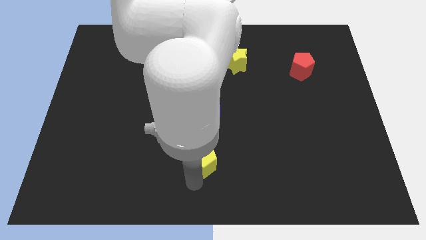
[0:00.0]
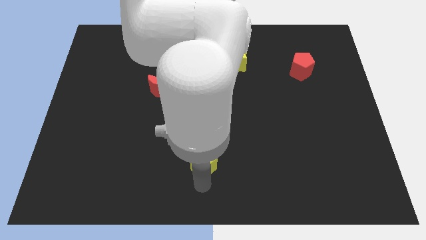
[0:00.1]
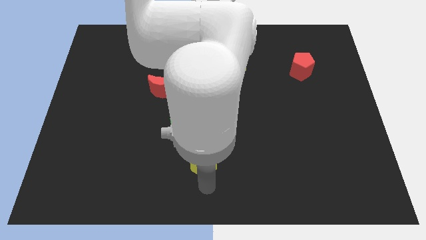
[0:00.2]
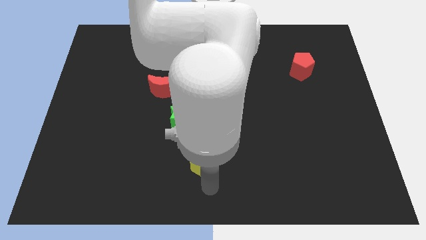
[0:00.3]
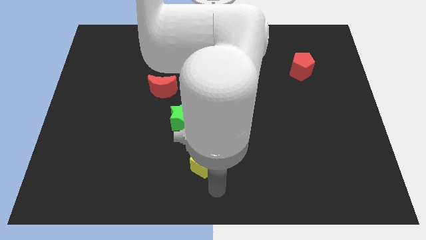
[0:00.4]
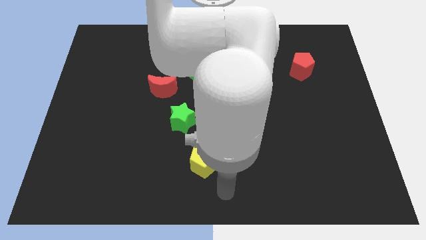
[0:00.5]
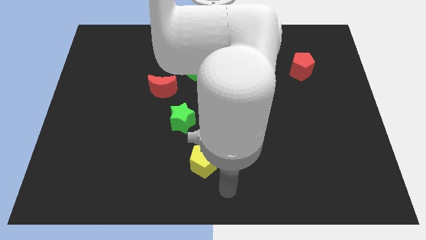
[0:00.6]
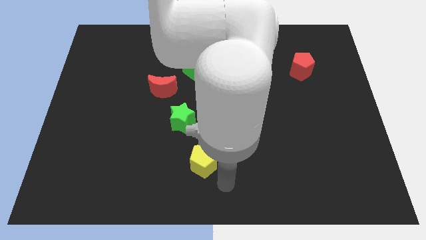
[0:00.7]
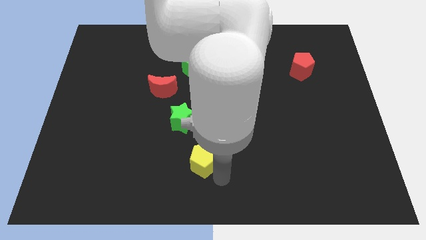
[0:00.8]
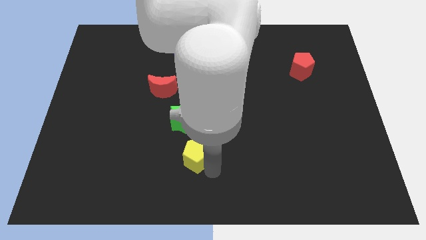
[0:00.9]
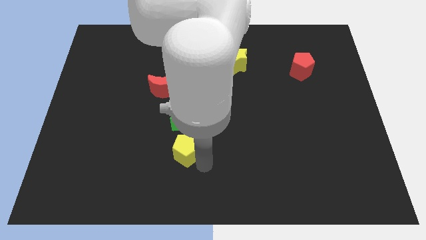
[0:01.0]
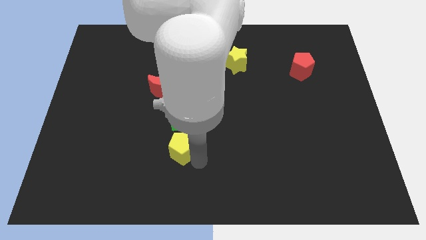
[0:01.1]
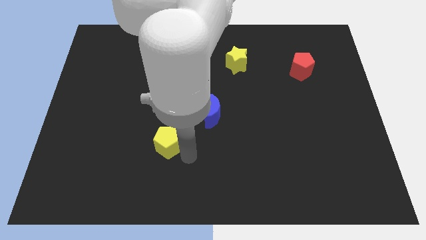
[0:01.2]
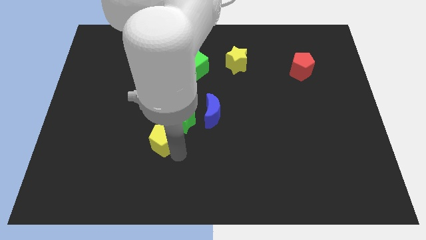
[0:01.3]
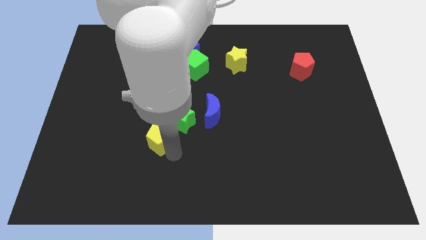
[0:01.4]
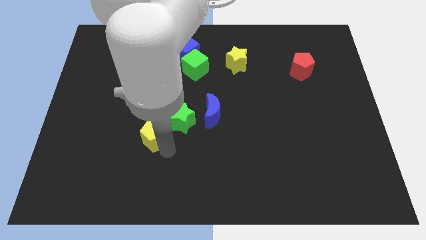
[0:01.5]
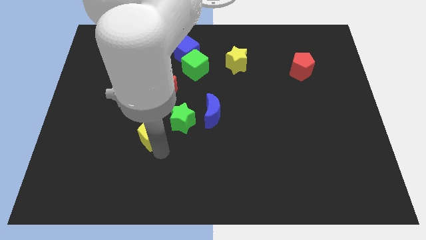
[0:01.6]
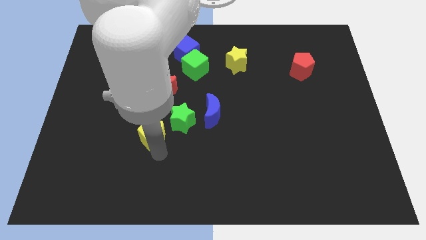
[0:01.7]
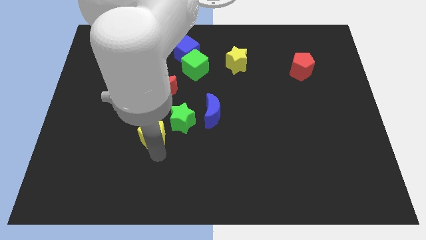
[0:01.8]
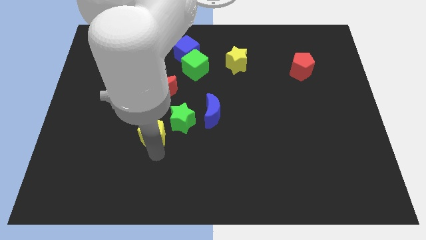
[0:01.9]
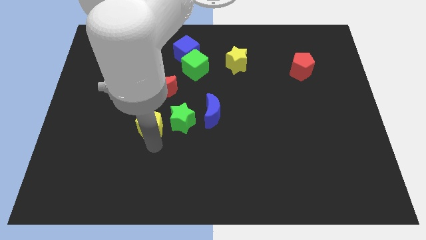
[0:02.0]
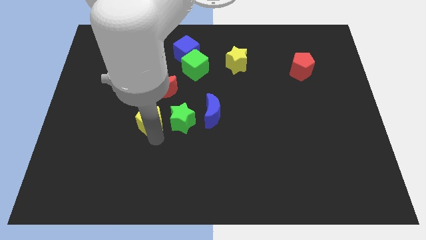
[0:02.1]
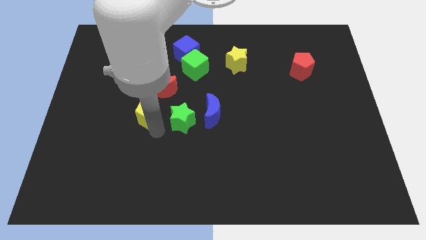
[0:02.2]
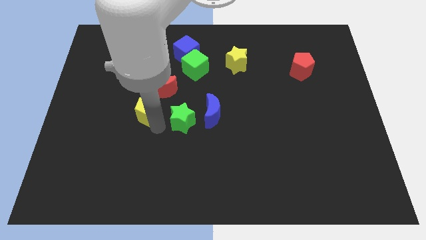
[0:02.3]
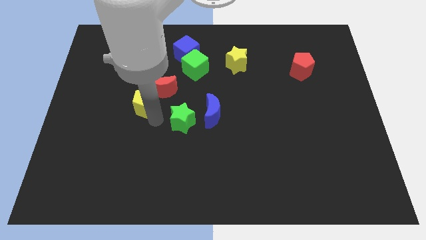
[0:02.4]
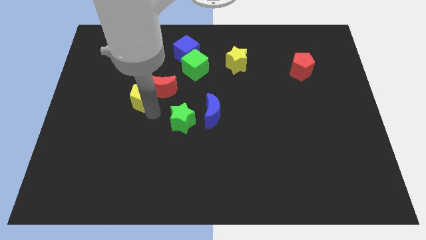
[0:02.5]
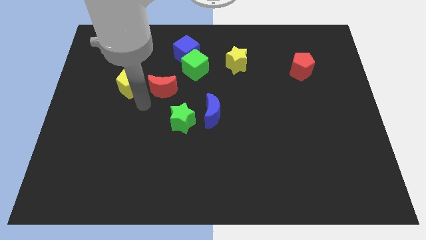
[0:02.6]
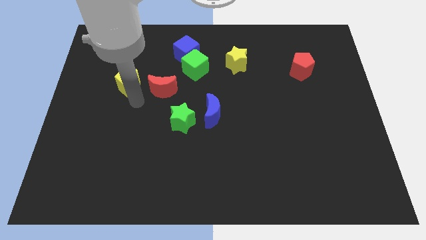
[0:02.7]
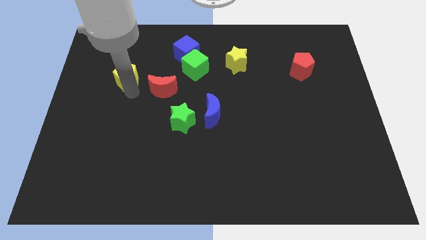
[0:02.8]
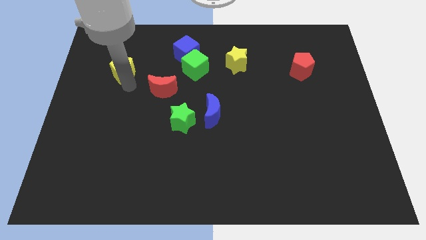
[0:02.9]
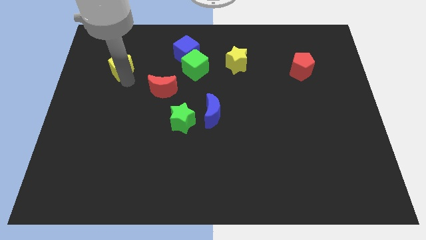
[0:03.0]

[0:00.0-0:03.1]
move yellow pentagon to top left of red moon

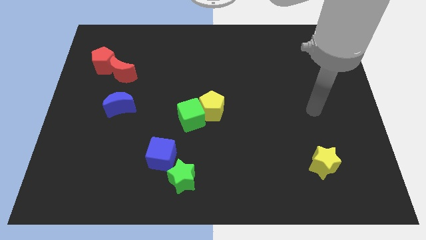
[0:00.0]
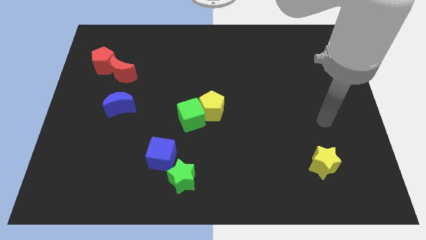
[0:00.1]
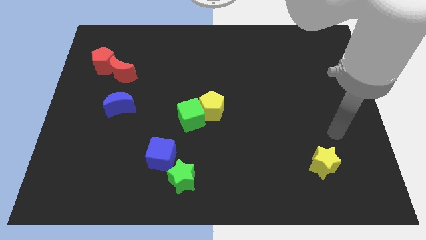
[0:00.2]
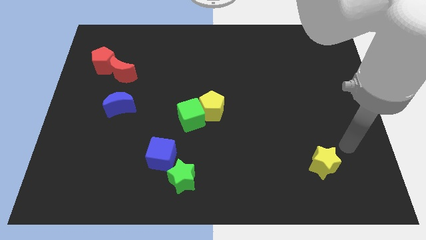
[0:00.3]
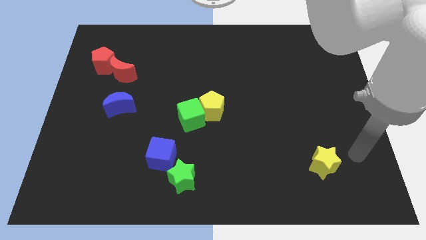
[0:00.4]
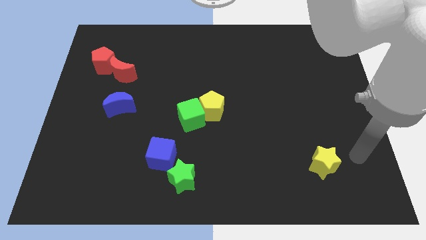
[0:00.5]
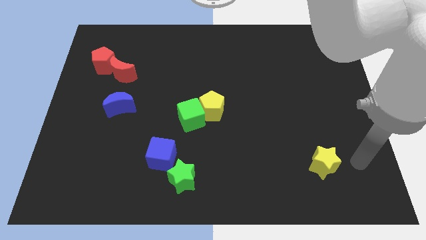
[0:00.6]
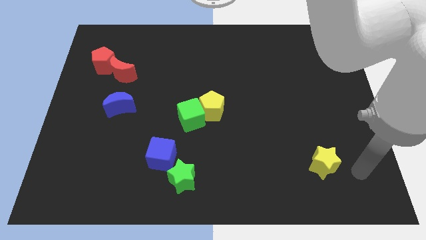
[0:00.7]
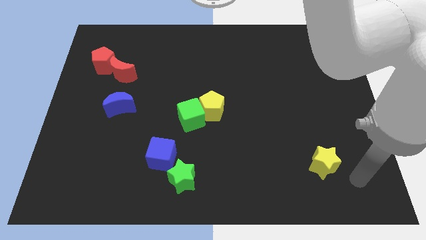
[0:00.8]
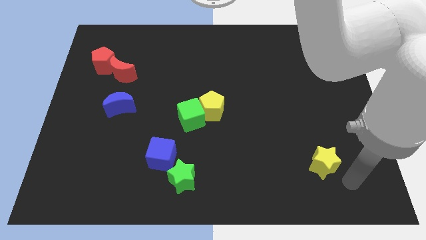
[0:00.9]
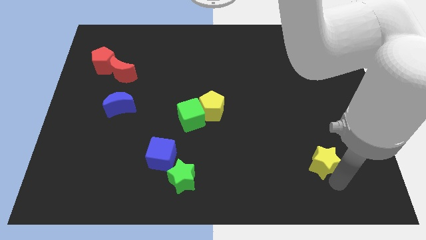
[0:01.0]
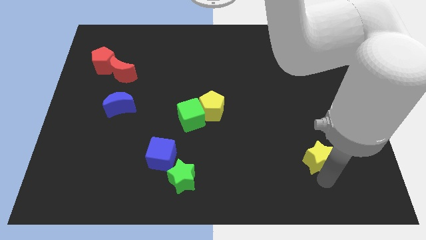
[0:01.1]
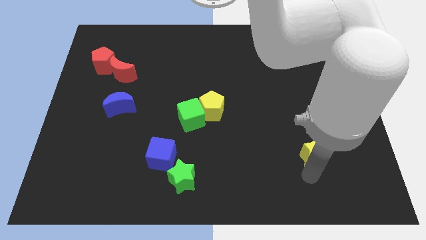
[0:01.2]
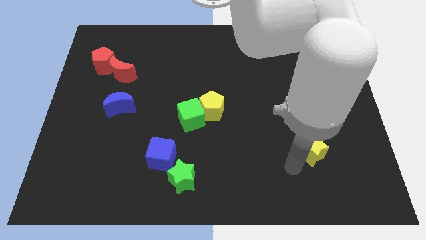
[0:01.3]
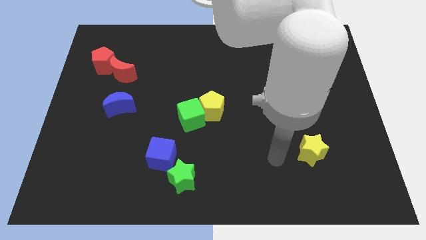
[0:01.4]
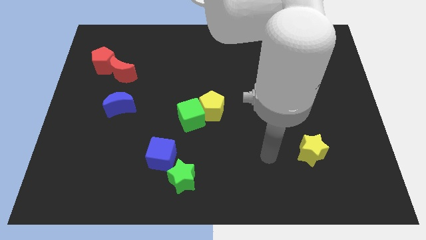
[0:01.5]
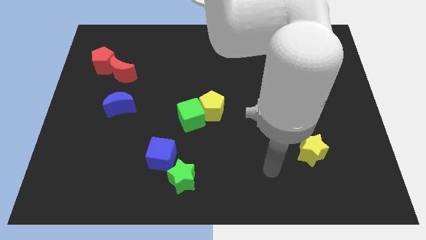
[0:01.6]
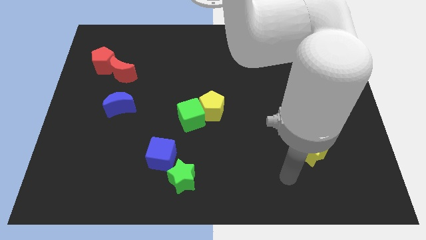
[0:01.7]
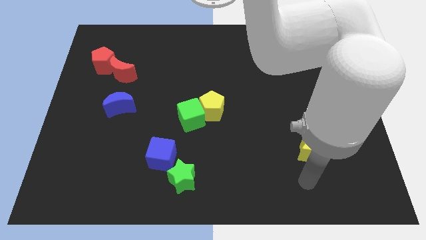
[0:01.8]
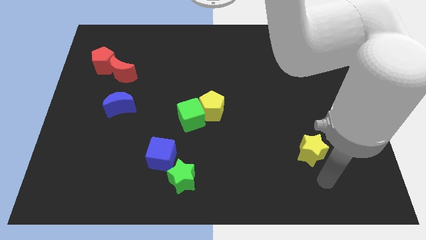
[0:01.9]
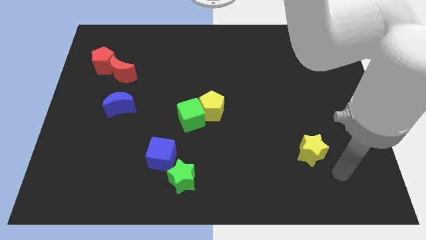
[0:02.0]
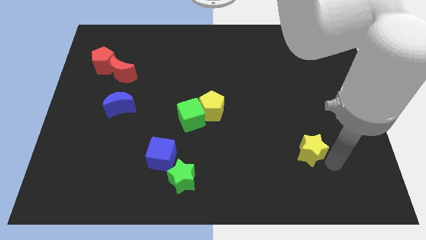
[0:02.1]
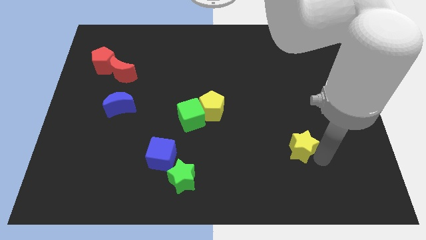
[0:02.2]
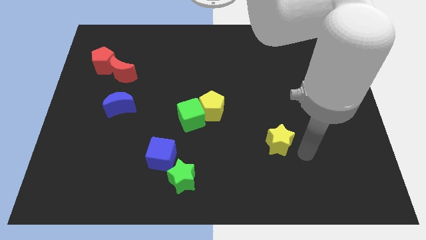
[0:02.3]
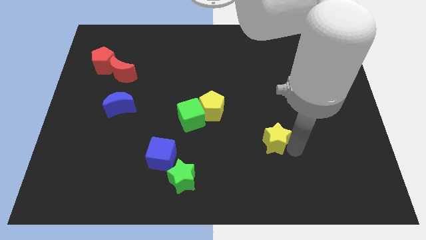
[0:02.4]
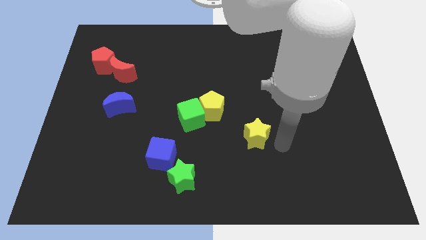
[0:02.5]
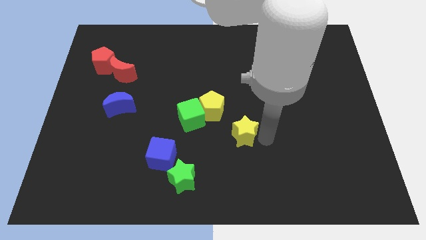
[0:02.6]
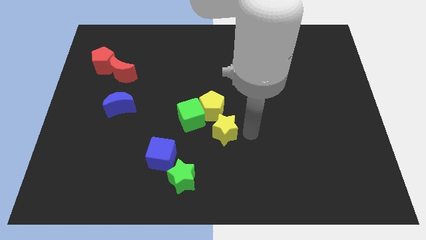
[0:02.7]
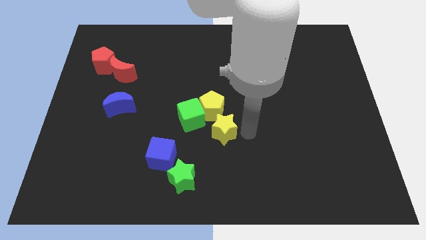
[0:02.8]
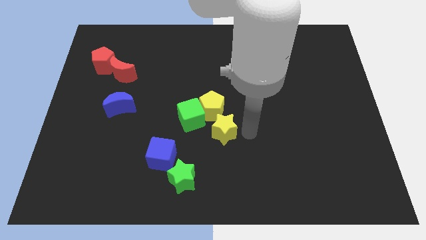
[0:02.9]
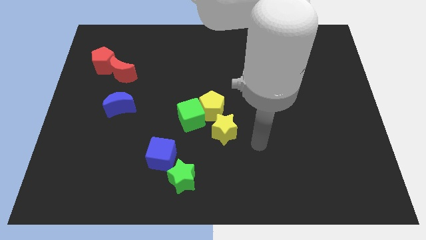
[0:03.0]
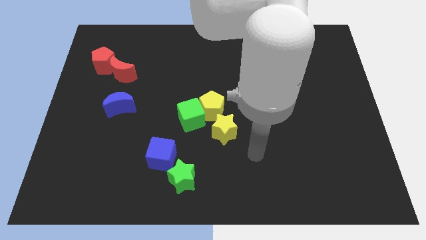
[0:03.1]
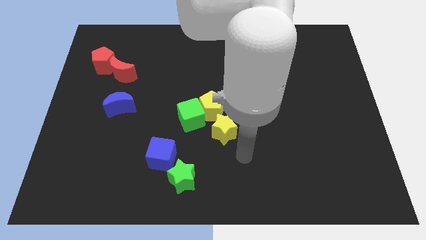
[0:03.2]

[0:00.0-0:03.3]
push the yellow star to the bottom of the yellow pentagon

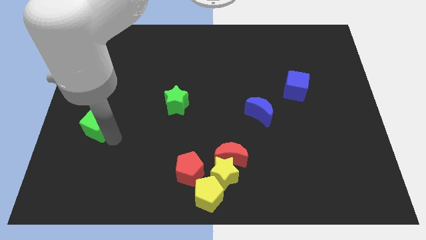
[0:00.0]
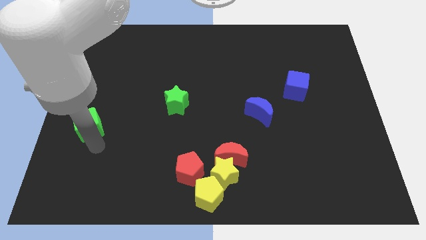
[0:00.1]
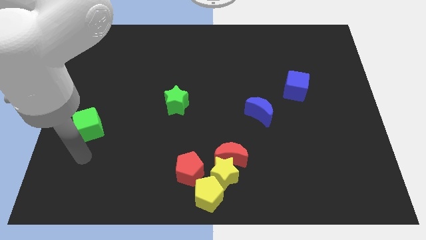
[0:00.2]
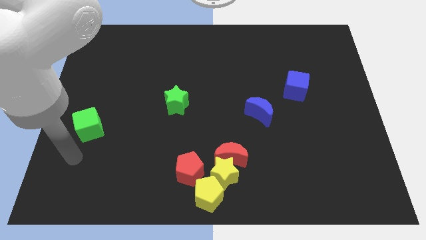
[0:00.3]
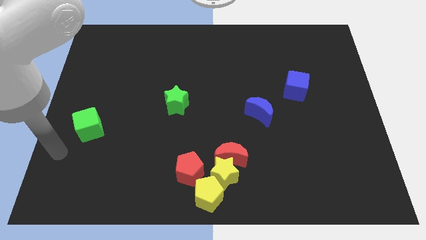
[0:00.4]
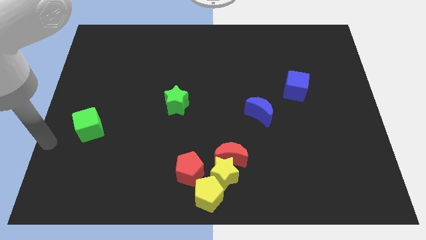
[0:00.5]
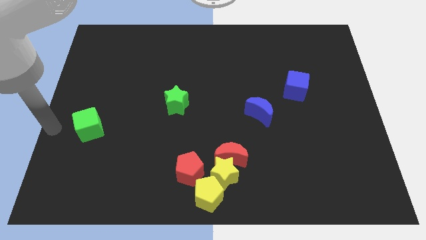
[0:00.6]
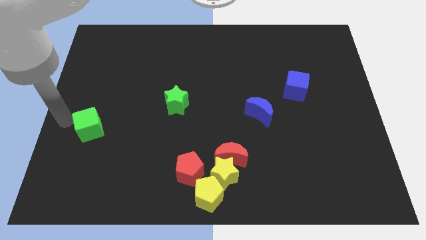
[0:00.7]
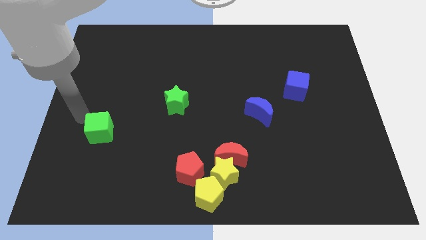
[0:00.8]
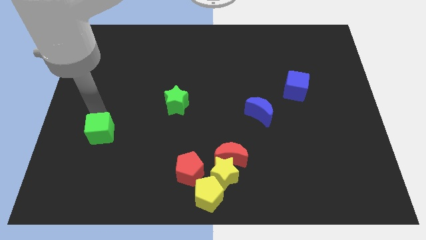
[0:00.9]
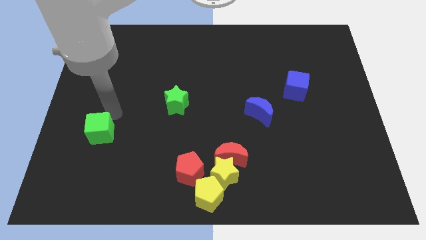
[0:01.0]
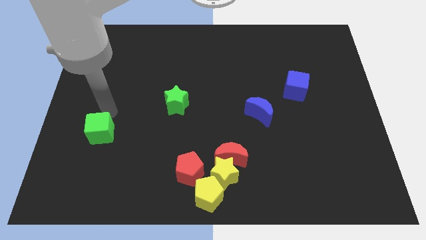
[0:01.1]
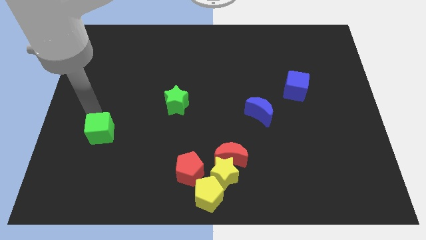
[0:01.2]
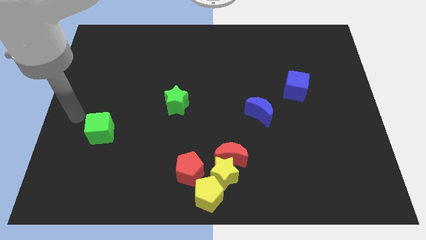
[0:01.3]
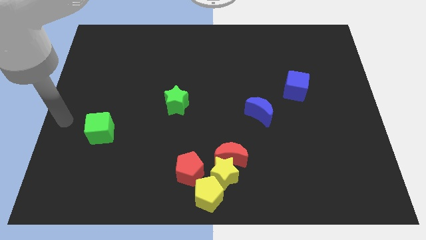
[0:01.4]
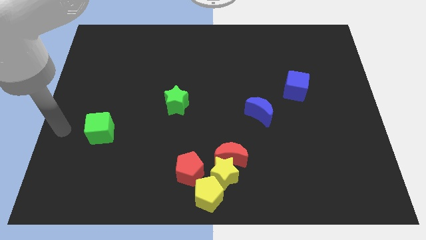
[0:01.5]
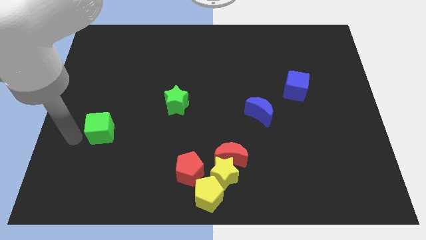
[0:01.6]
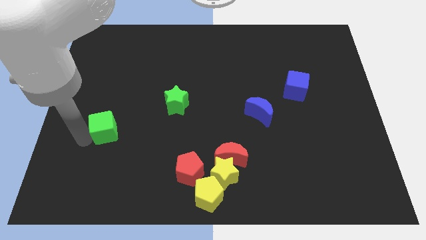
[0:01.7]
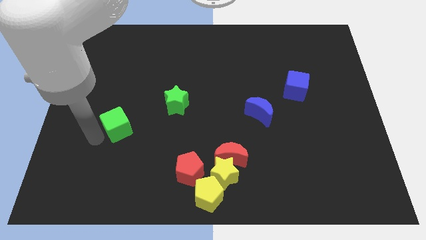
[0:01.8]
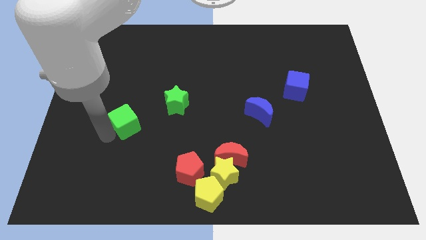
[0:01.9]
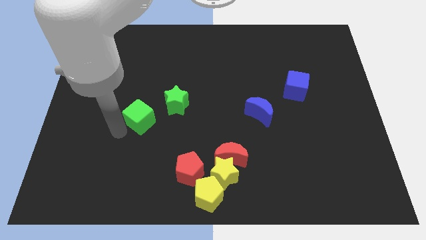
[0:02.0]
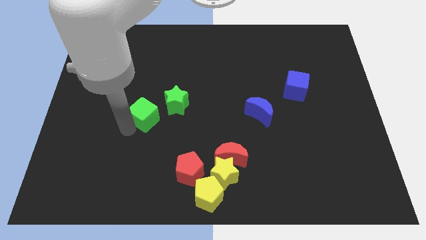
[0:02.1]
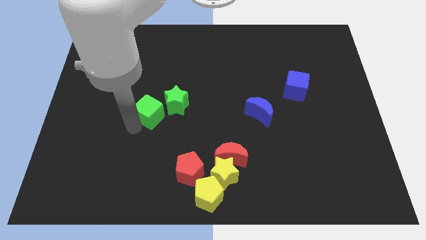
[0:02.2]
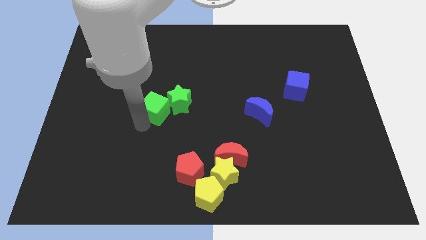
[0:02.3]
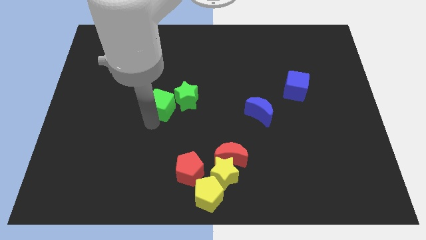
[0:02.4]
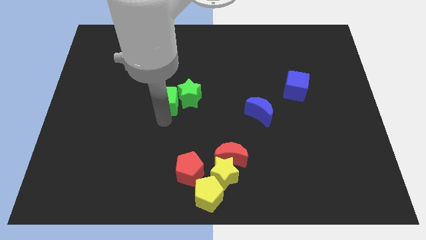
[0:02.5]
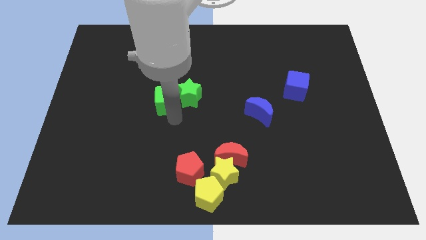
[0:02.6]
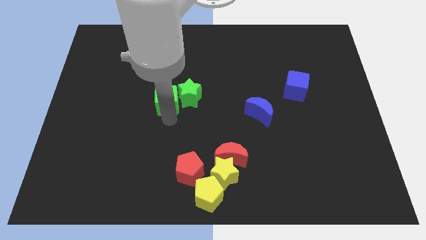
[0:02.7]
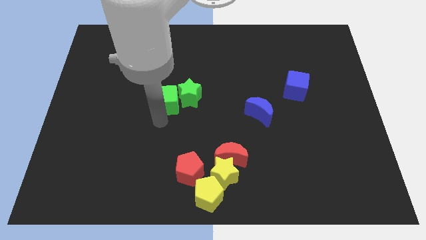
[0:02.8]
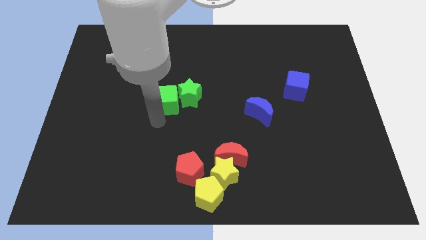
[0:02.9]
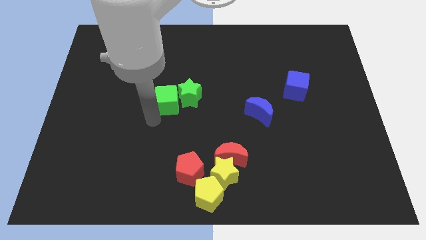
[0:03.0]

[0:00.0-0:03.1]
slide the green cube into the green star
